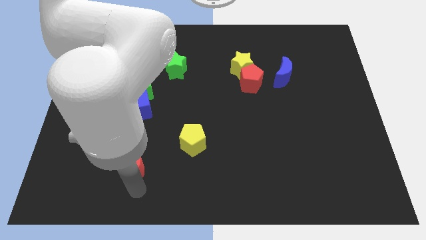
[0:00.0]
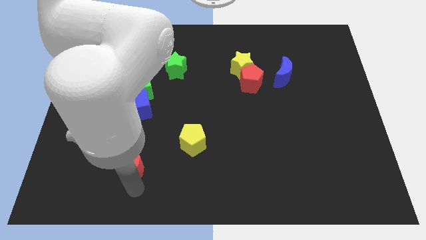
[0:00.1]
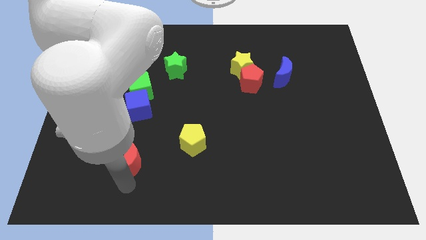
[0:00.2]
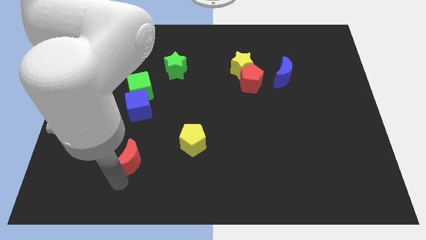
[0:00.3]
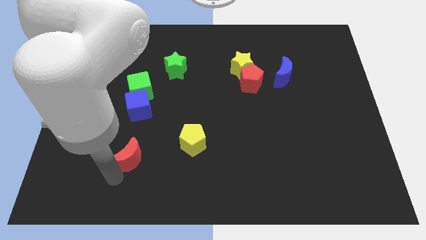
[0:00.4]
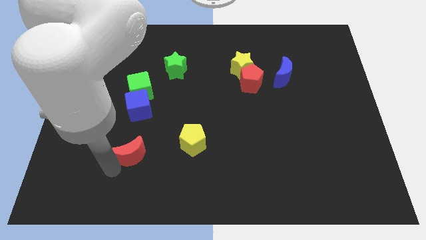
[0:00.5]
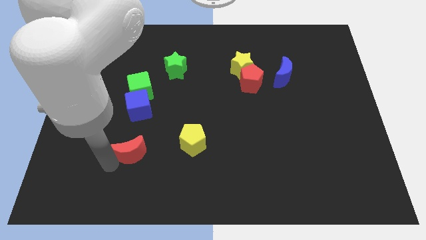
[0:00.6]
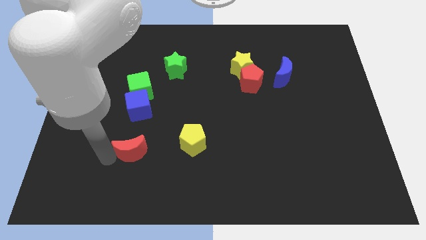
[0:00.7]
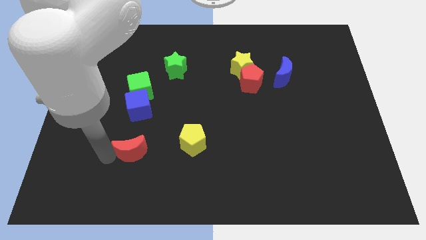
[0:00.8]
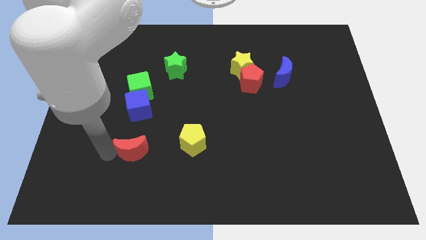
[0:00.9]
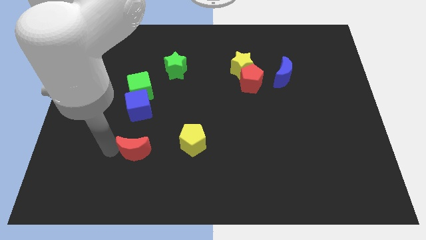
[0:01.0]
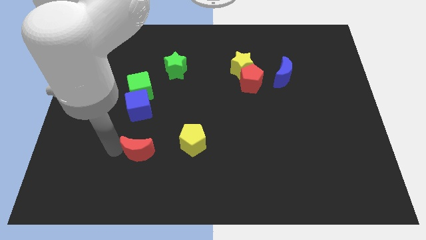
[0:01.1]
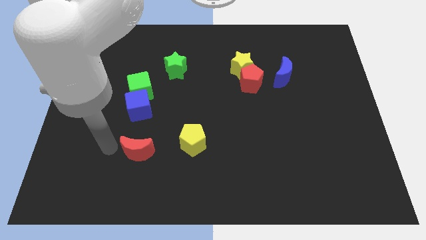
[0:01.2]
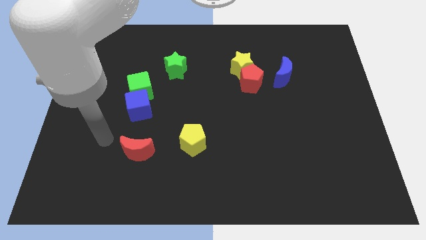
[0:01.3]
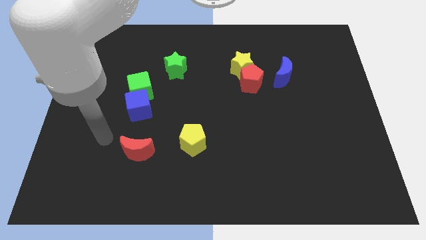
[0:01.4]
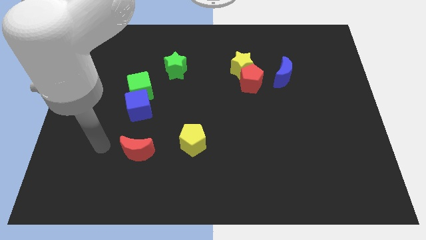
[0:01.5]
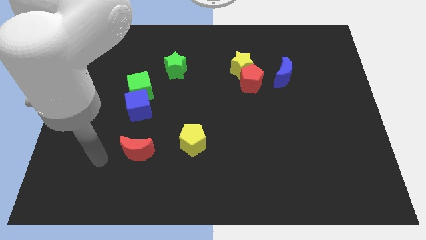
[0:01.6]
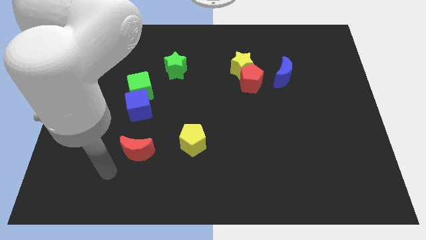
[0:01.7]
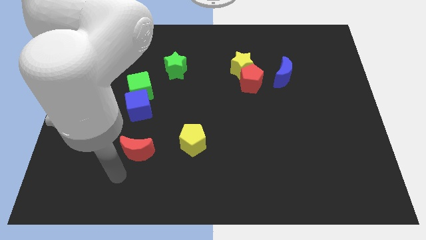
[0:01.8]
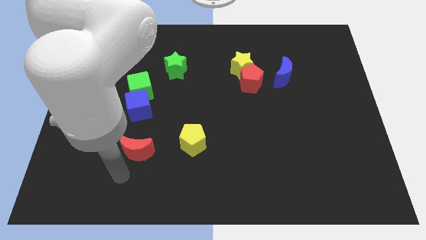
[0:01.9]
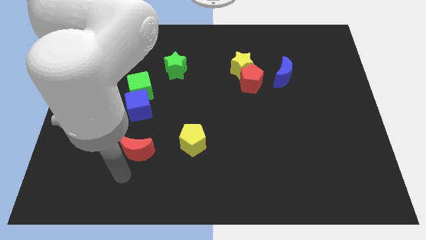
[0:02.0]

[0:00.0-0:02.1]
move the red moon below the blue cube

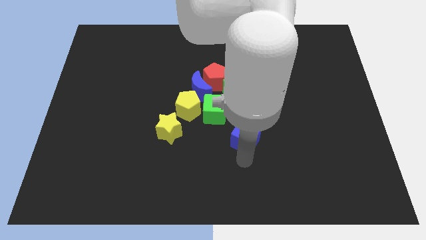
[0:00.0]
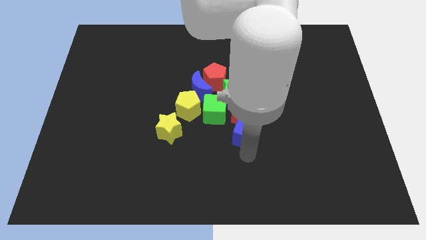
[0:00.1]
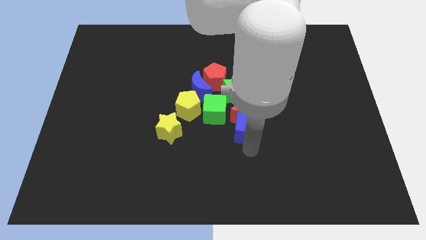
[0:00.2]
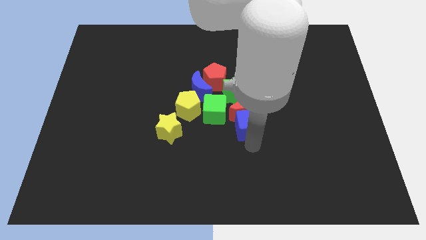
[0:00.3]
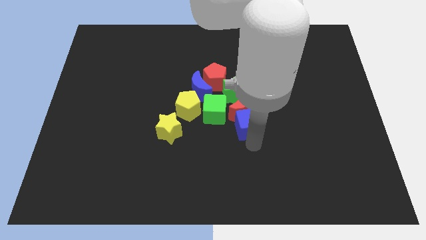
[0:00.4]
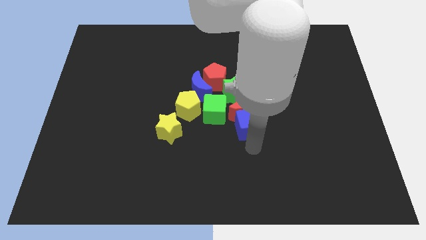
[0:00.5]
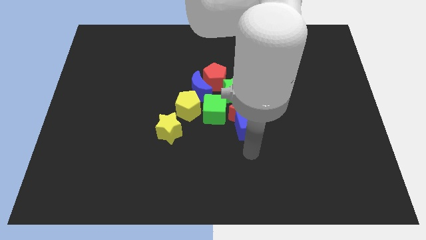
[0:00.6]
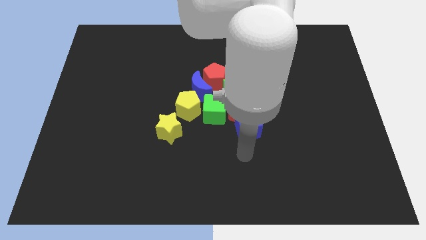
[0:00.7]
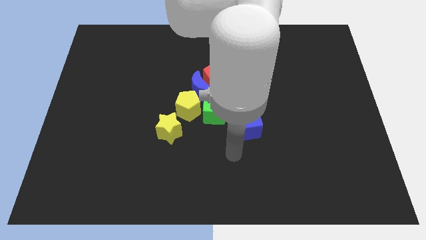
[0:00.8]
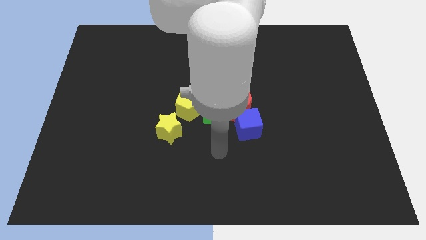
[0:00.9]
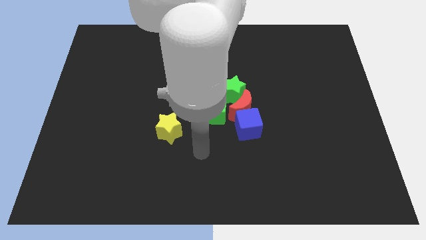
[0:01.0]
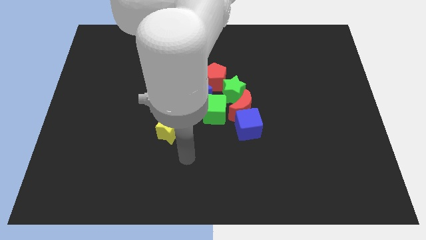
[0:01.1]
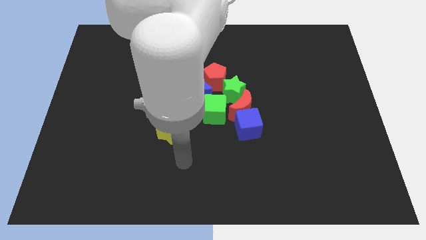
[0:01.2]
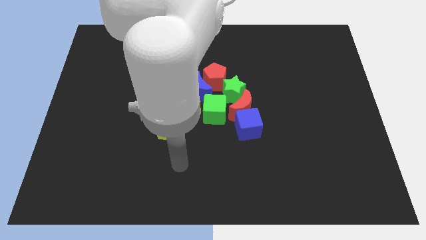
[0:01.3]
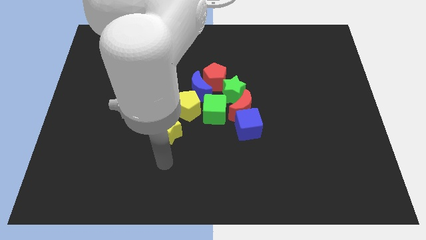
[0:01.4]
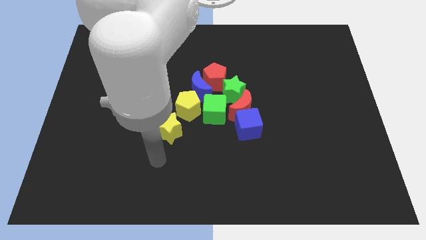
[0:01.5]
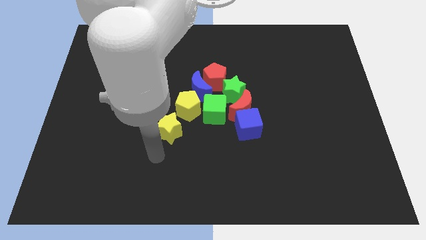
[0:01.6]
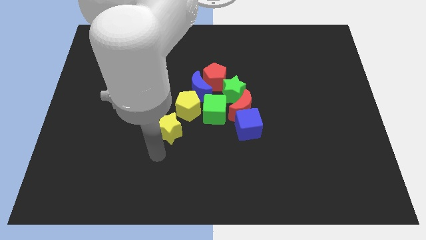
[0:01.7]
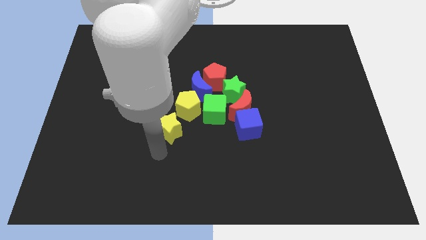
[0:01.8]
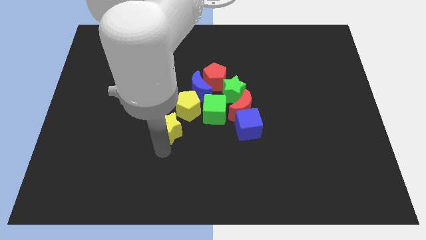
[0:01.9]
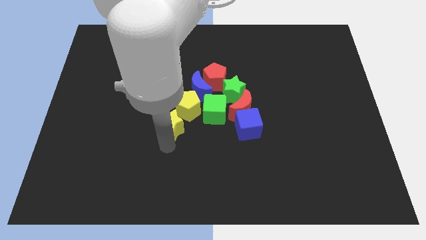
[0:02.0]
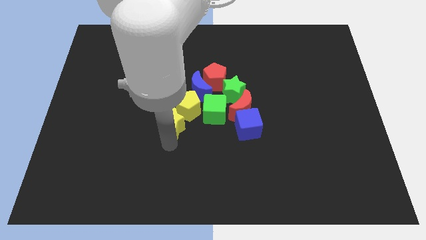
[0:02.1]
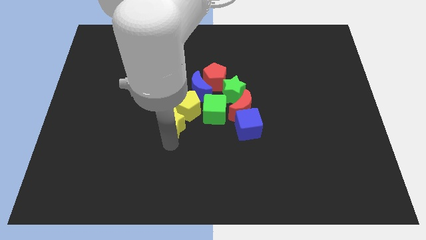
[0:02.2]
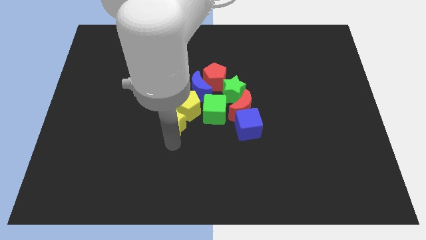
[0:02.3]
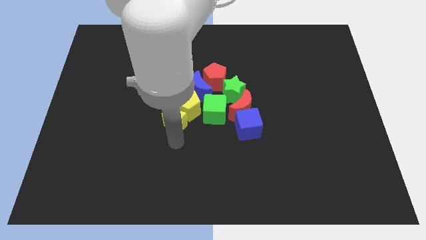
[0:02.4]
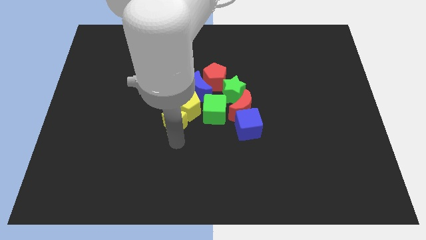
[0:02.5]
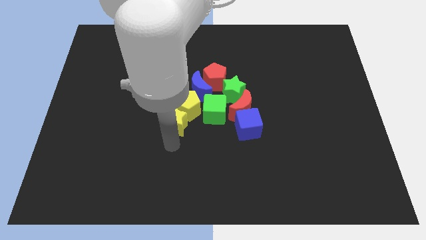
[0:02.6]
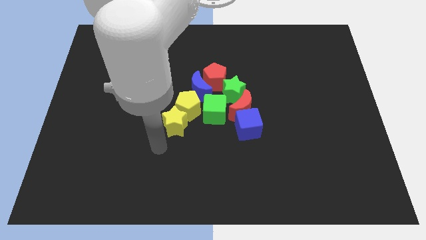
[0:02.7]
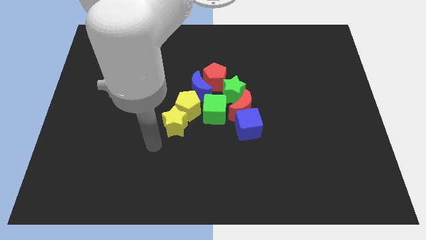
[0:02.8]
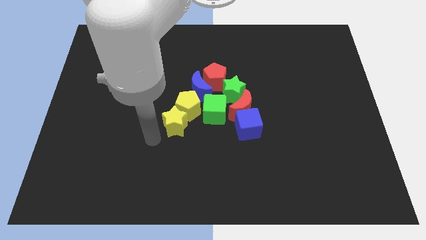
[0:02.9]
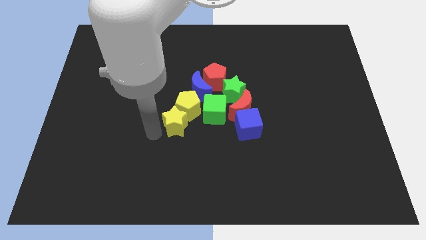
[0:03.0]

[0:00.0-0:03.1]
push the blue cube into red crescent

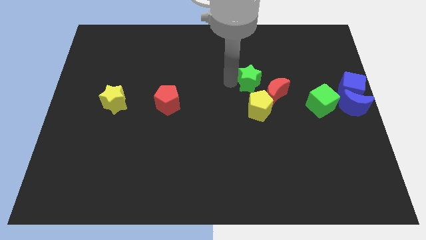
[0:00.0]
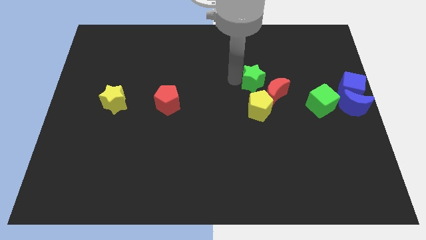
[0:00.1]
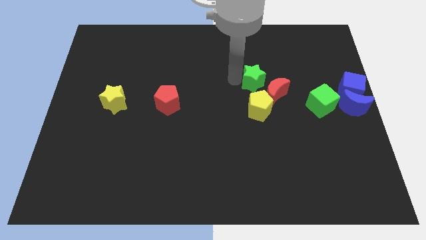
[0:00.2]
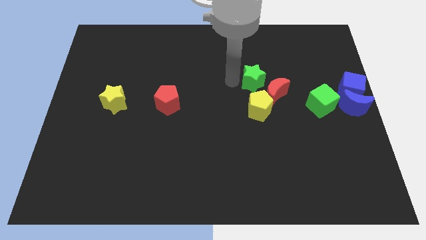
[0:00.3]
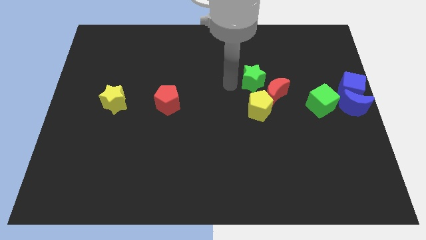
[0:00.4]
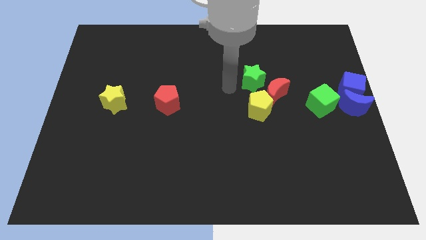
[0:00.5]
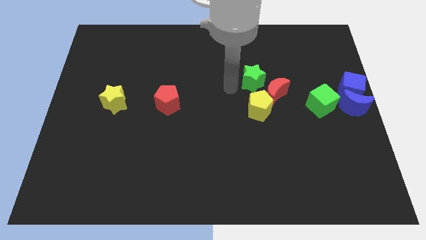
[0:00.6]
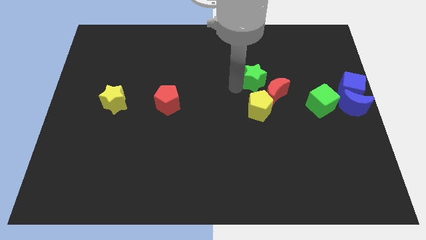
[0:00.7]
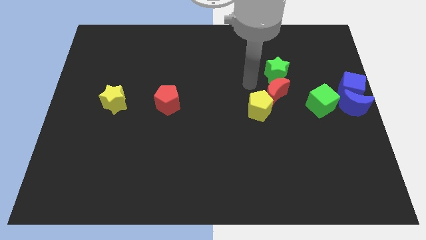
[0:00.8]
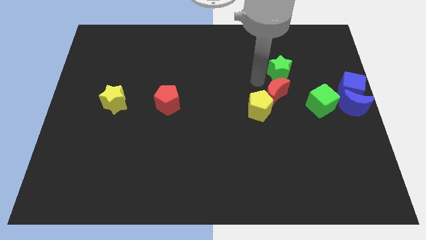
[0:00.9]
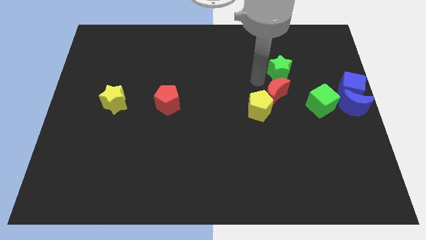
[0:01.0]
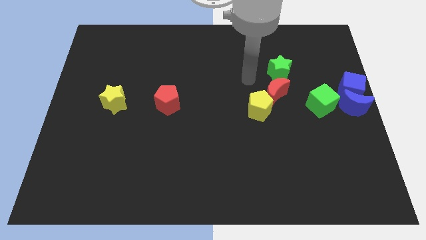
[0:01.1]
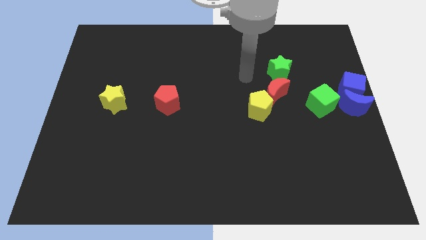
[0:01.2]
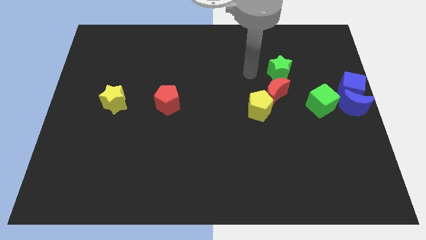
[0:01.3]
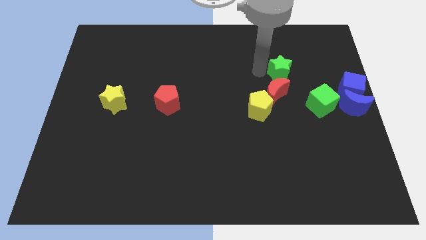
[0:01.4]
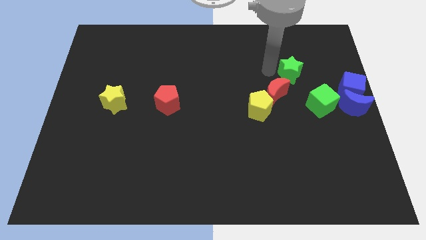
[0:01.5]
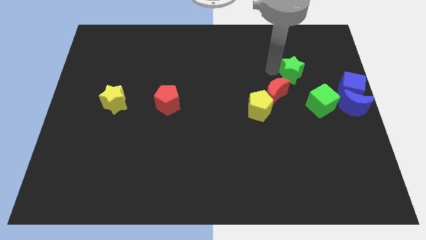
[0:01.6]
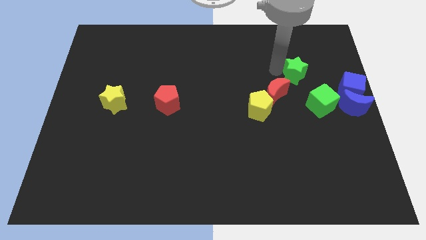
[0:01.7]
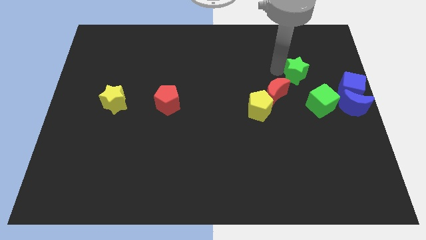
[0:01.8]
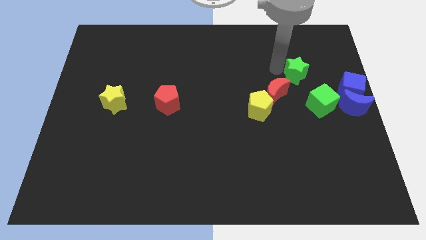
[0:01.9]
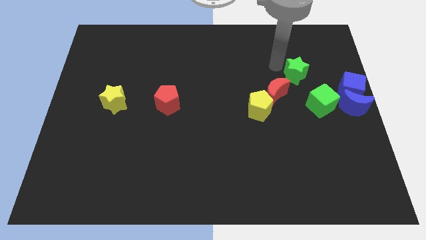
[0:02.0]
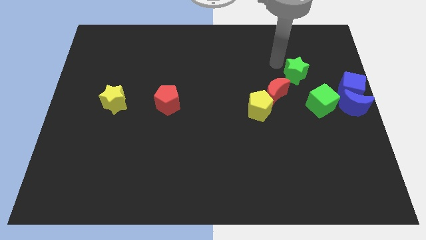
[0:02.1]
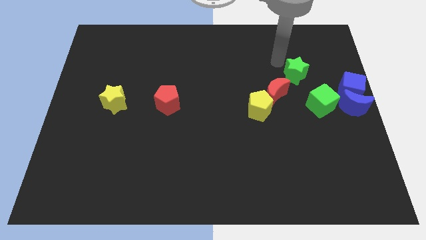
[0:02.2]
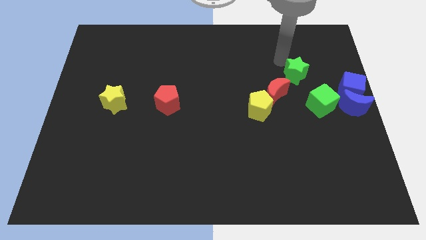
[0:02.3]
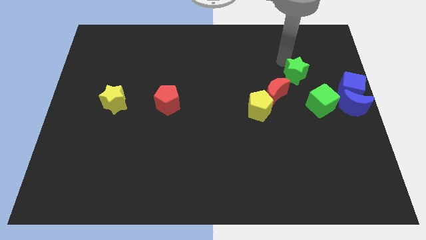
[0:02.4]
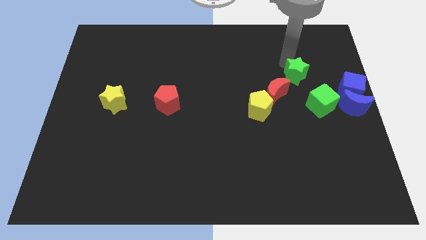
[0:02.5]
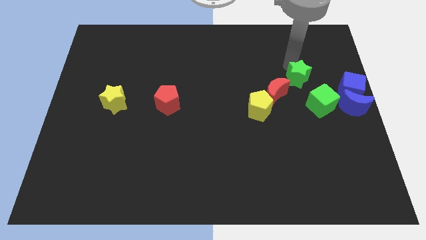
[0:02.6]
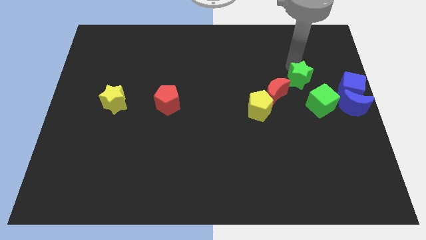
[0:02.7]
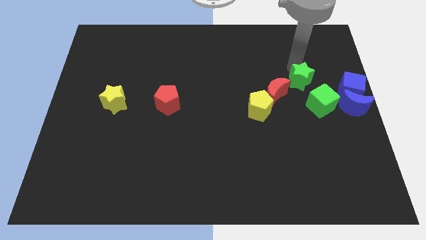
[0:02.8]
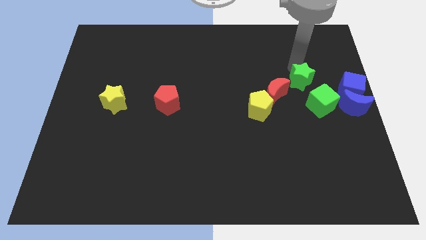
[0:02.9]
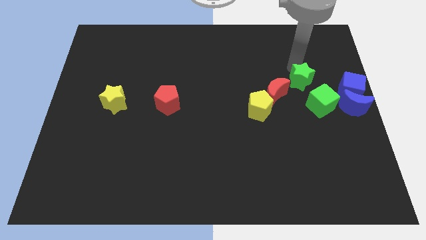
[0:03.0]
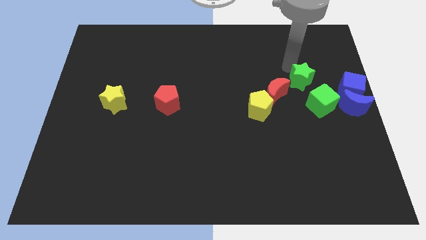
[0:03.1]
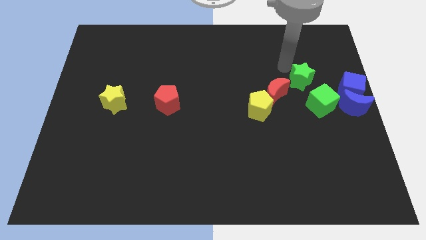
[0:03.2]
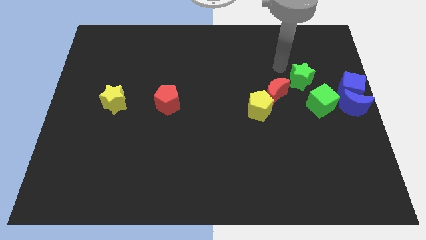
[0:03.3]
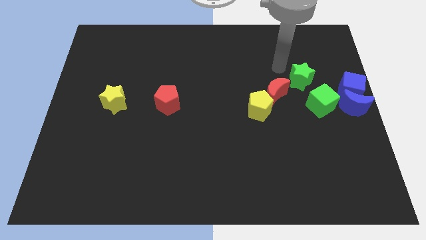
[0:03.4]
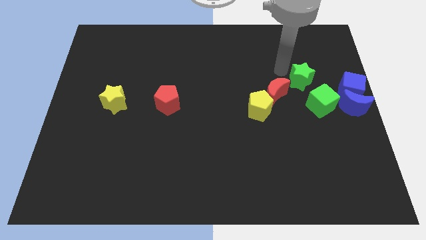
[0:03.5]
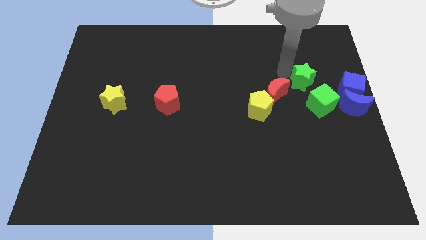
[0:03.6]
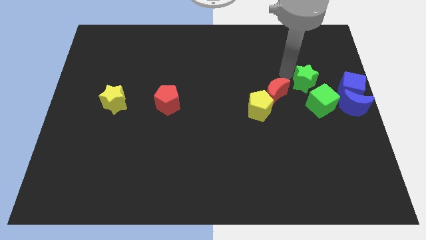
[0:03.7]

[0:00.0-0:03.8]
move the green star towards the green cube
